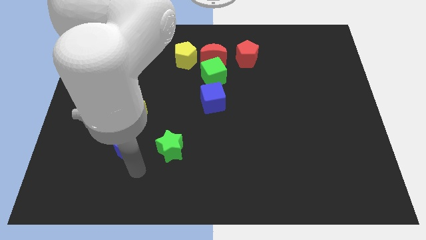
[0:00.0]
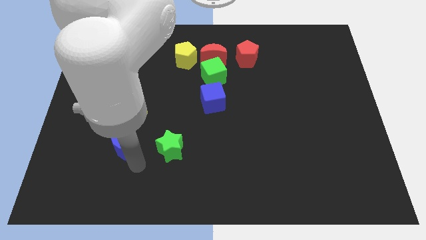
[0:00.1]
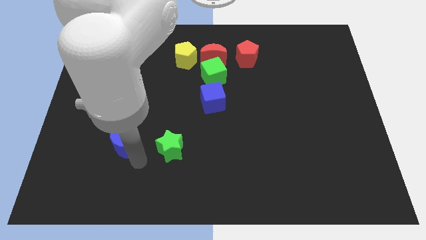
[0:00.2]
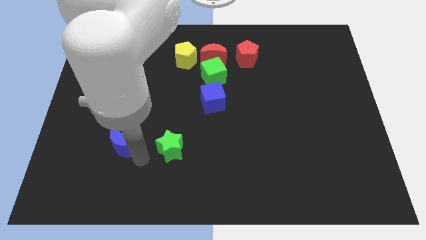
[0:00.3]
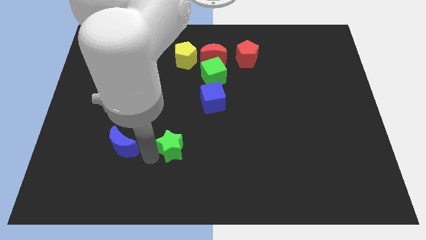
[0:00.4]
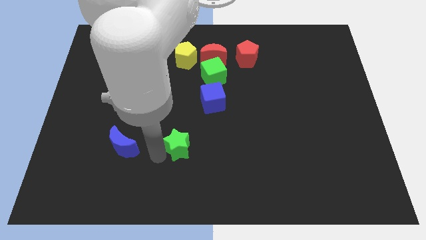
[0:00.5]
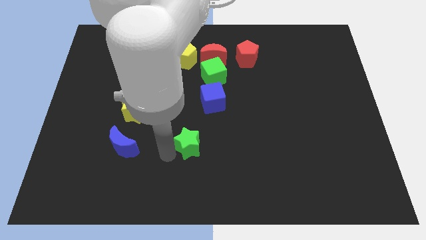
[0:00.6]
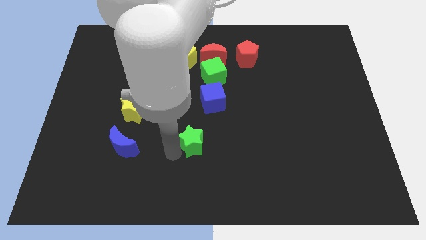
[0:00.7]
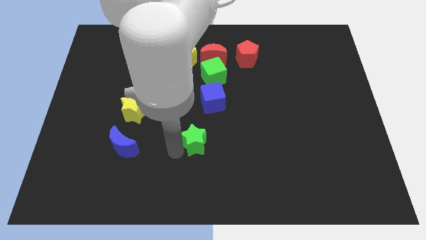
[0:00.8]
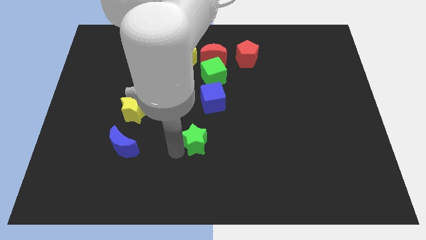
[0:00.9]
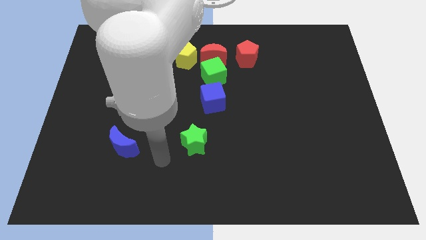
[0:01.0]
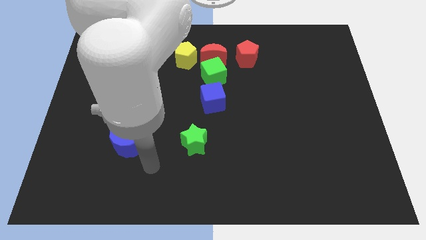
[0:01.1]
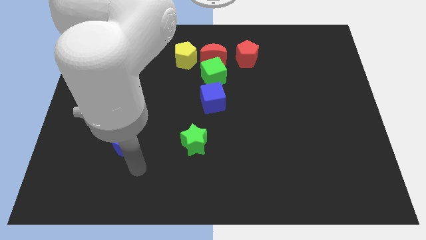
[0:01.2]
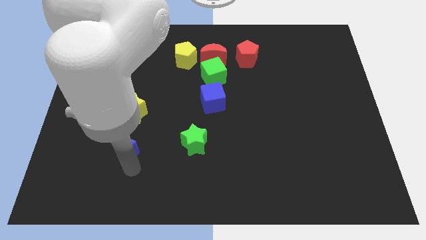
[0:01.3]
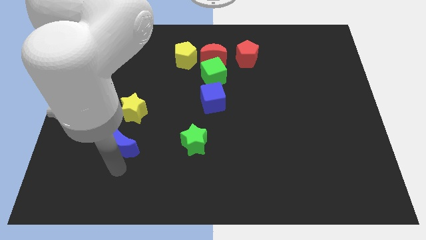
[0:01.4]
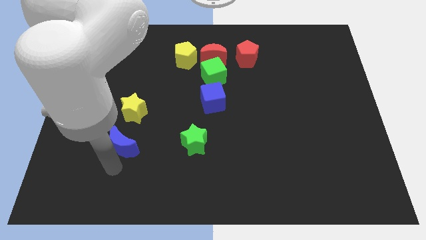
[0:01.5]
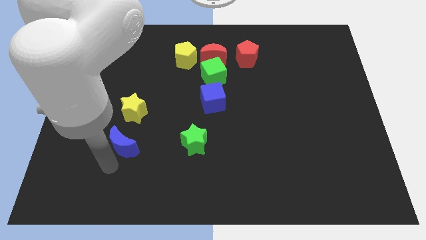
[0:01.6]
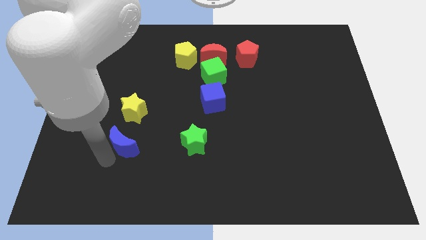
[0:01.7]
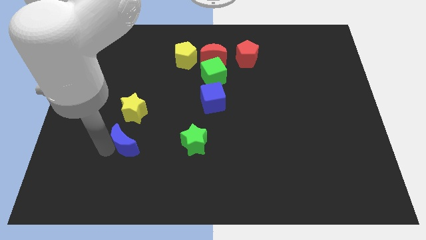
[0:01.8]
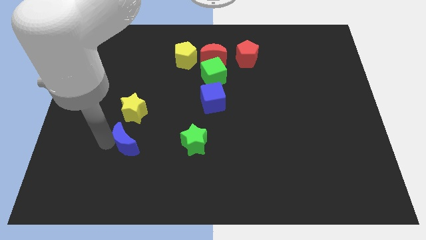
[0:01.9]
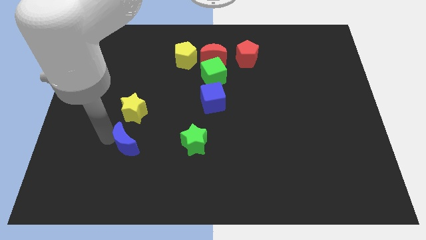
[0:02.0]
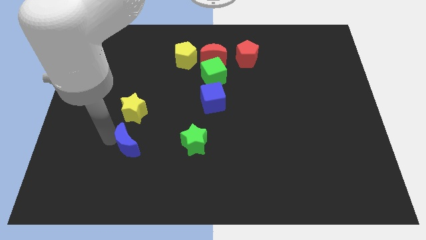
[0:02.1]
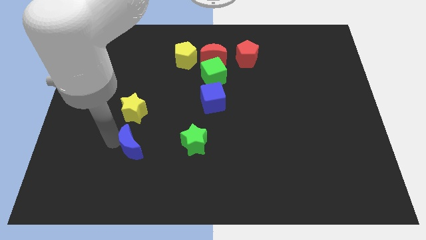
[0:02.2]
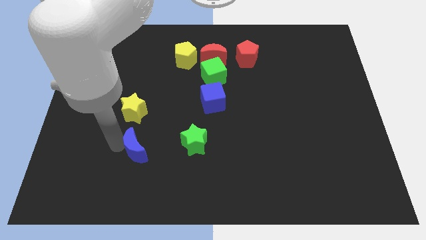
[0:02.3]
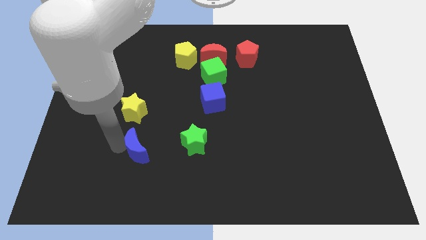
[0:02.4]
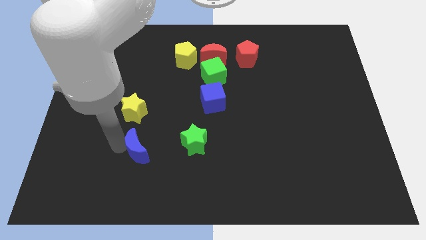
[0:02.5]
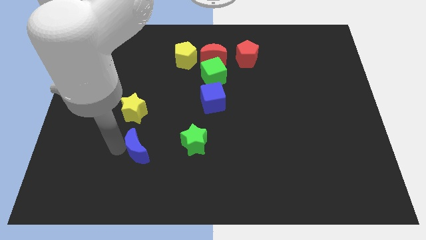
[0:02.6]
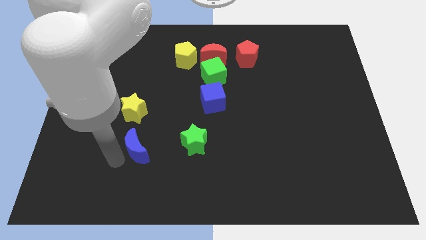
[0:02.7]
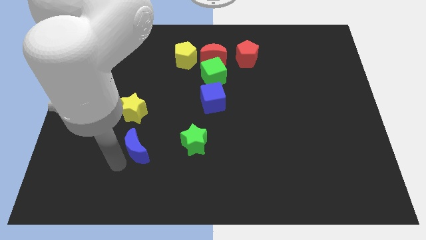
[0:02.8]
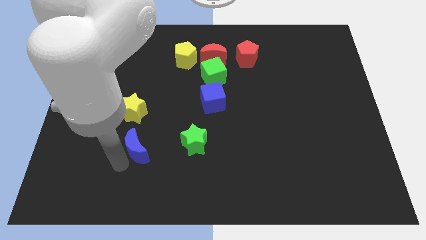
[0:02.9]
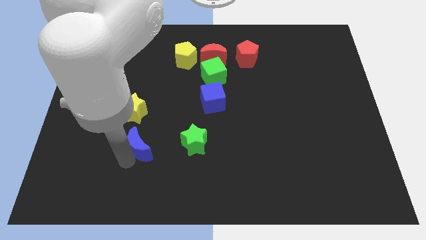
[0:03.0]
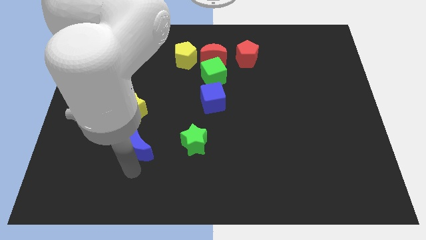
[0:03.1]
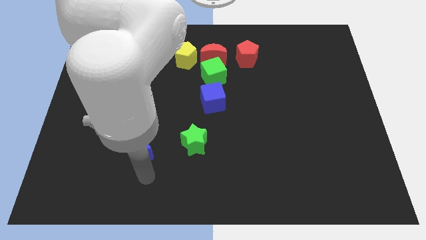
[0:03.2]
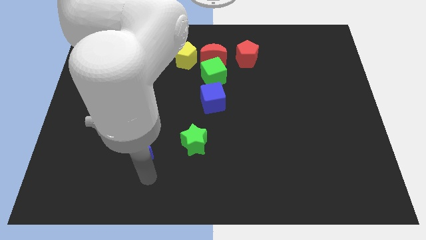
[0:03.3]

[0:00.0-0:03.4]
slightly push the blue crescent and green star towards the center of the board

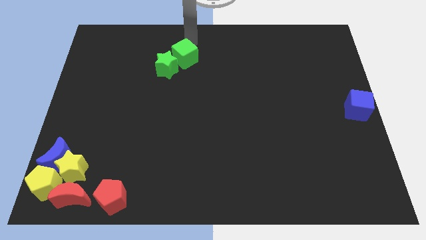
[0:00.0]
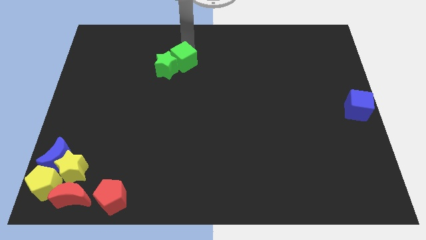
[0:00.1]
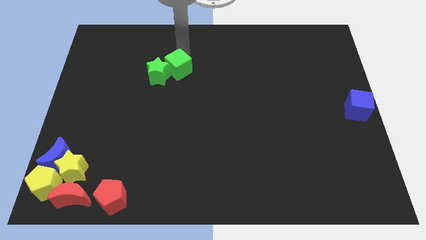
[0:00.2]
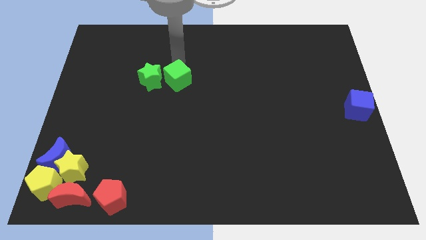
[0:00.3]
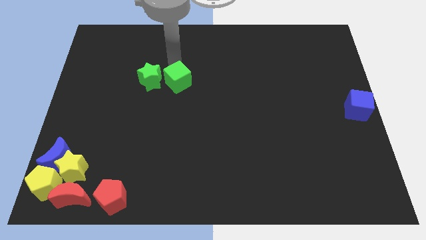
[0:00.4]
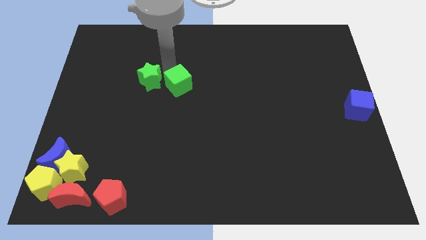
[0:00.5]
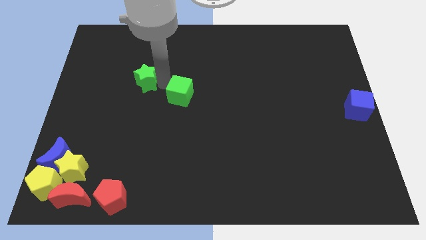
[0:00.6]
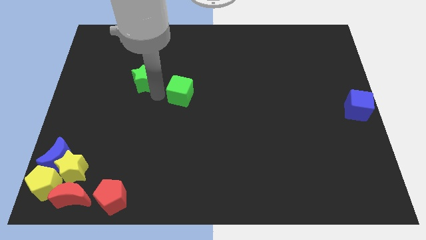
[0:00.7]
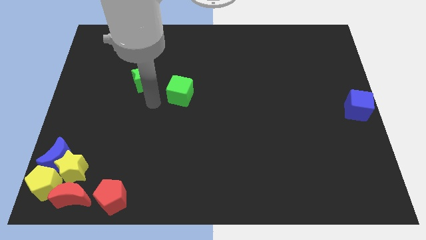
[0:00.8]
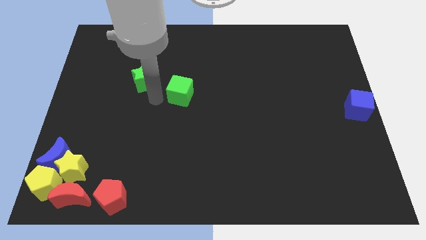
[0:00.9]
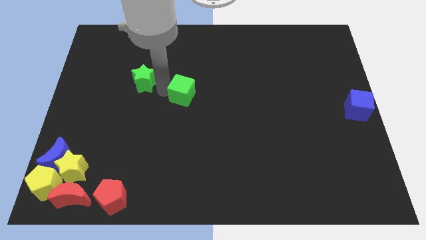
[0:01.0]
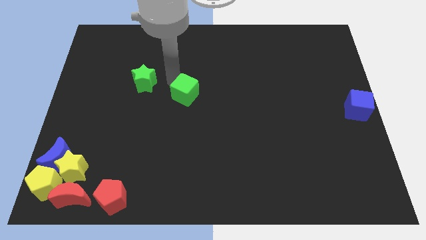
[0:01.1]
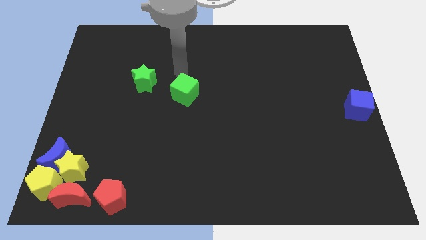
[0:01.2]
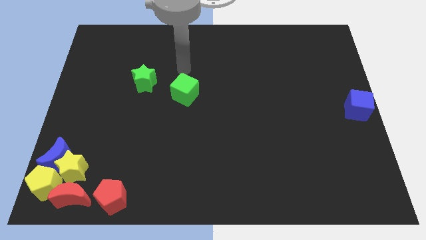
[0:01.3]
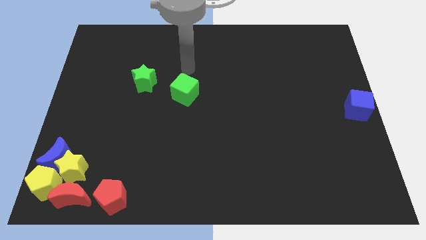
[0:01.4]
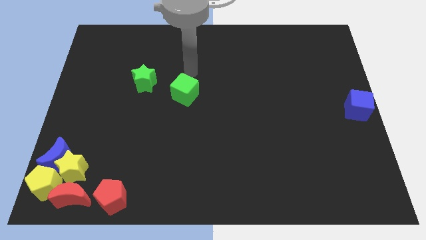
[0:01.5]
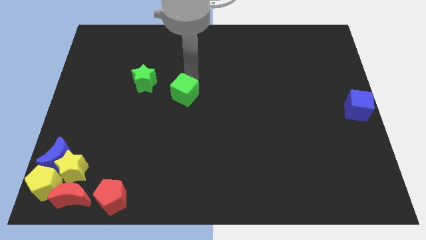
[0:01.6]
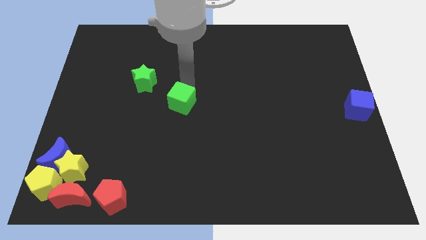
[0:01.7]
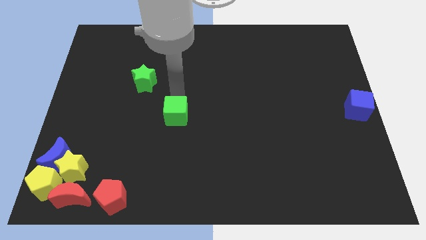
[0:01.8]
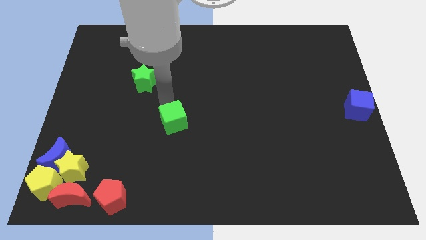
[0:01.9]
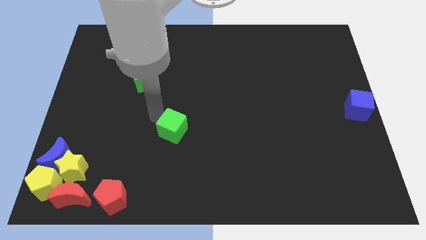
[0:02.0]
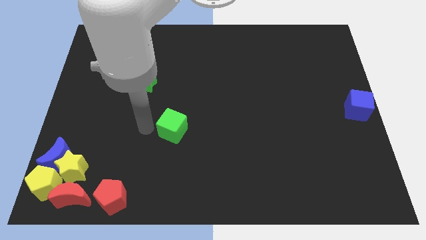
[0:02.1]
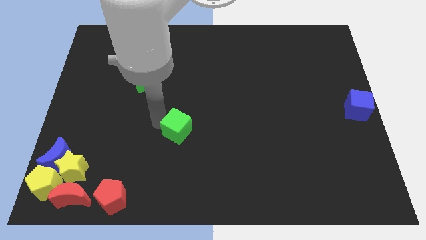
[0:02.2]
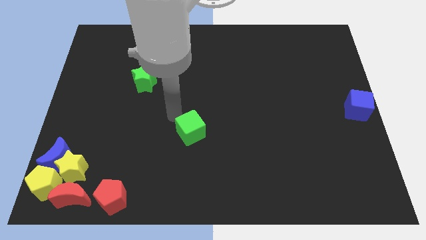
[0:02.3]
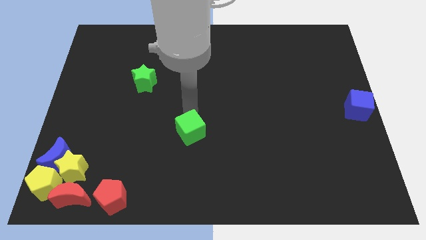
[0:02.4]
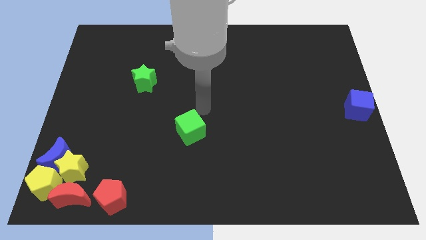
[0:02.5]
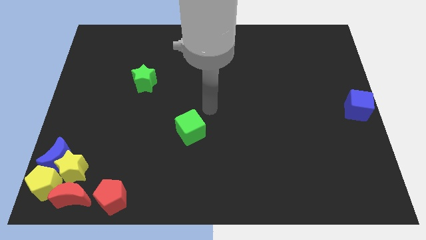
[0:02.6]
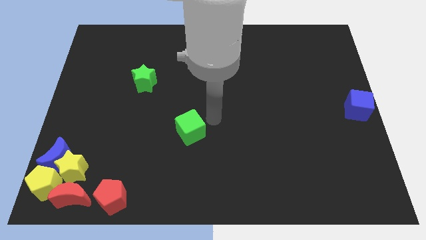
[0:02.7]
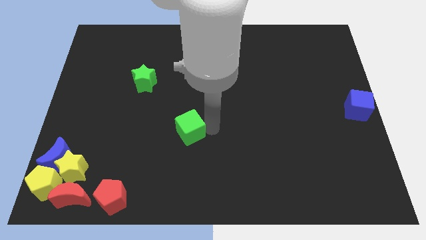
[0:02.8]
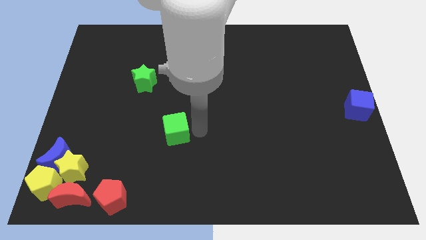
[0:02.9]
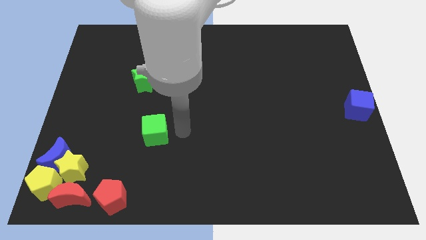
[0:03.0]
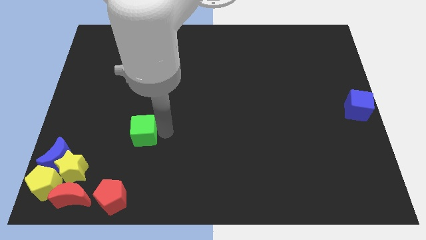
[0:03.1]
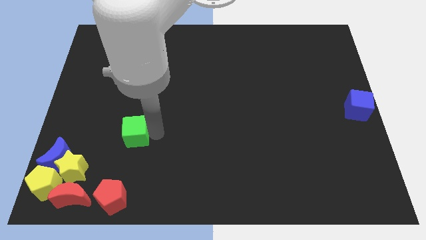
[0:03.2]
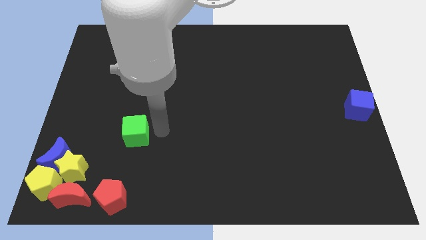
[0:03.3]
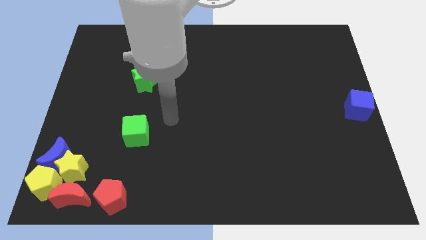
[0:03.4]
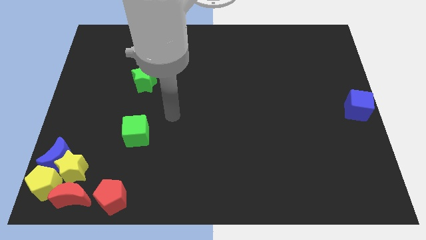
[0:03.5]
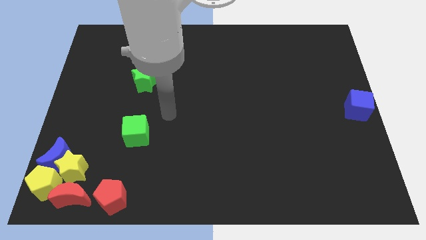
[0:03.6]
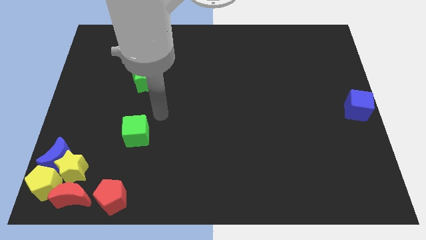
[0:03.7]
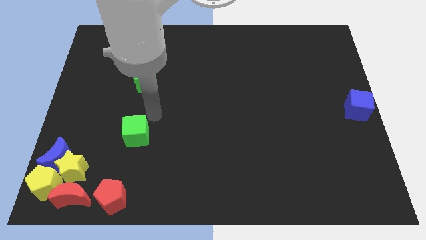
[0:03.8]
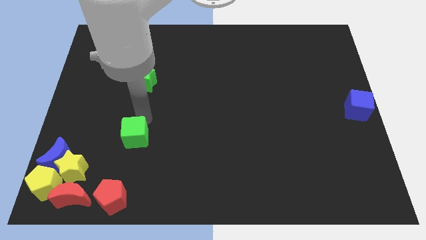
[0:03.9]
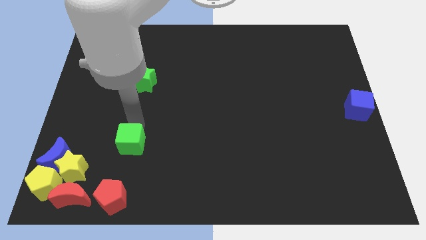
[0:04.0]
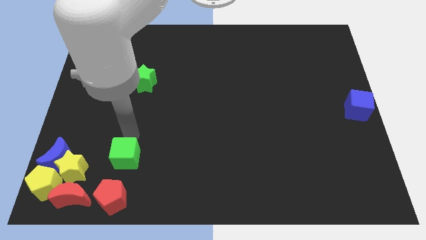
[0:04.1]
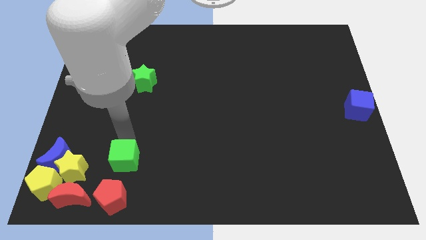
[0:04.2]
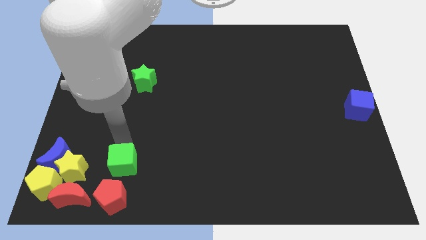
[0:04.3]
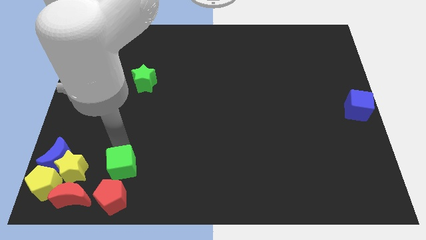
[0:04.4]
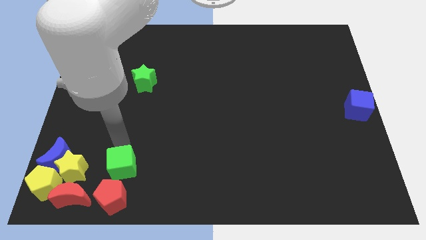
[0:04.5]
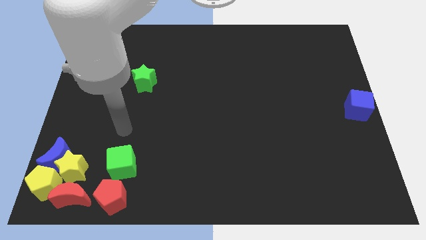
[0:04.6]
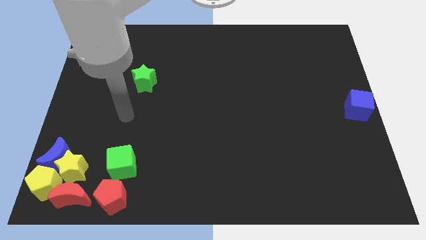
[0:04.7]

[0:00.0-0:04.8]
push the green cube to the top side of the red pentagon

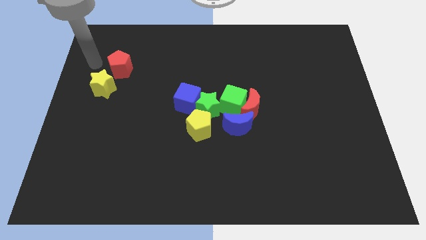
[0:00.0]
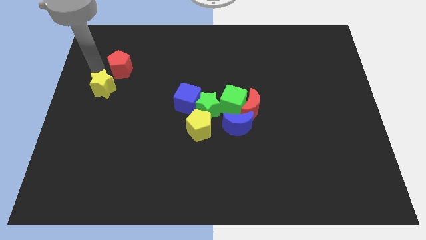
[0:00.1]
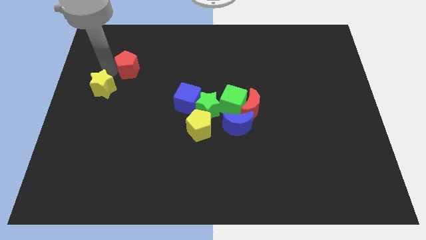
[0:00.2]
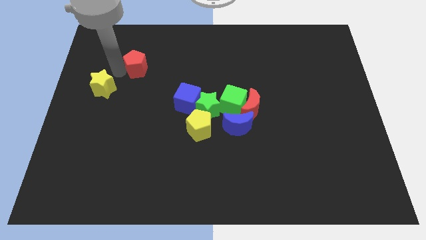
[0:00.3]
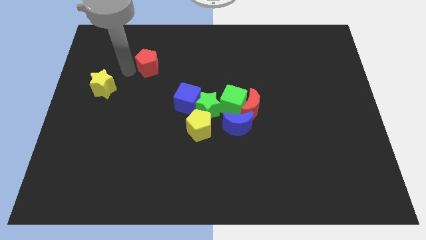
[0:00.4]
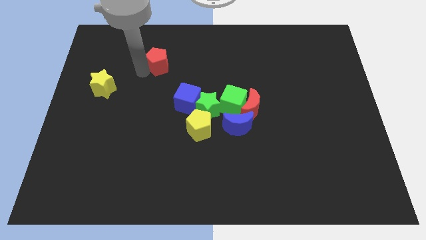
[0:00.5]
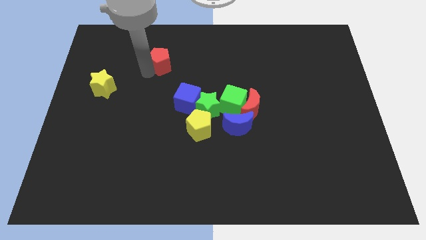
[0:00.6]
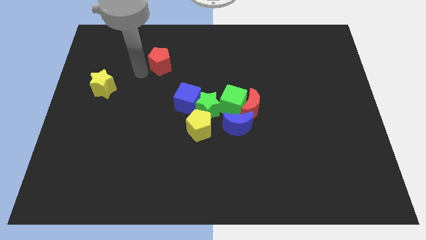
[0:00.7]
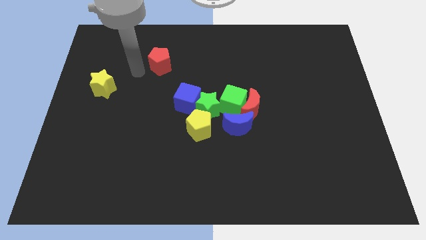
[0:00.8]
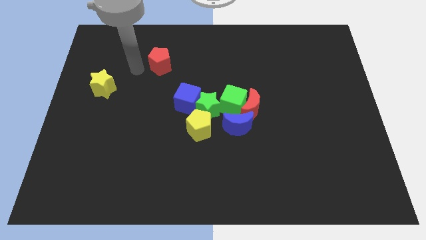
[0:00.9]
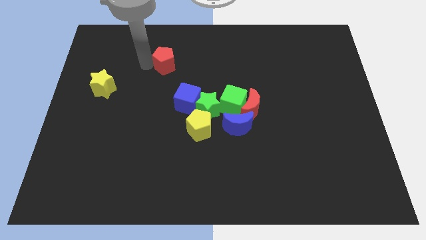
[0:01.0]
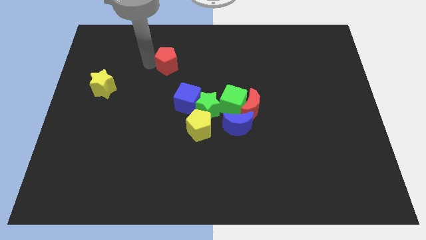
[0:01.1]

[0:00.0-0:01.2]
separate the red pentagon from the yellow star
